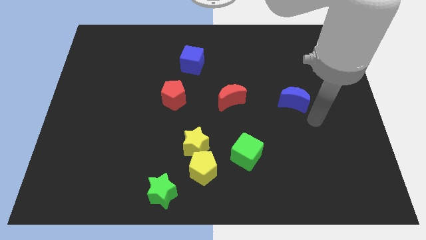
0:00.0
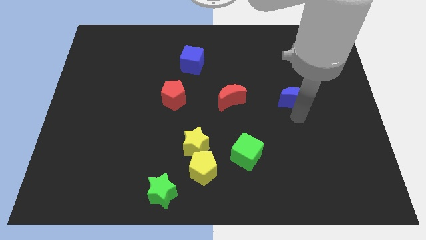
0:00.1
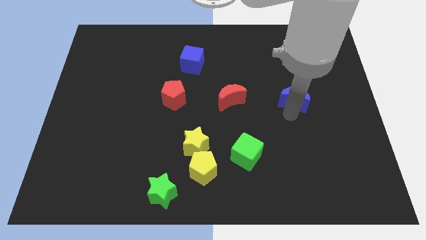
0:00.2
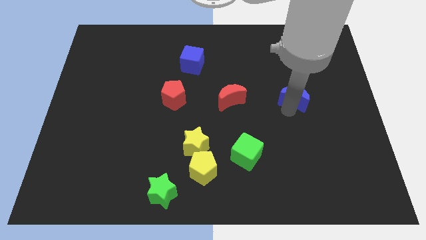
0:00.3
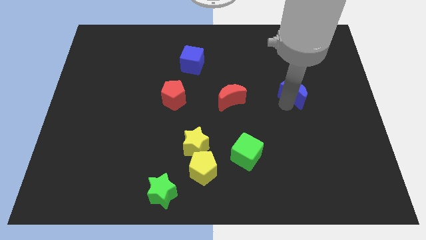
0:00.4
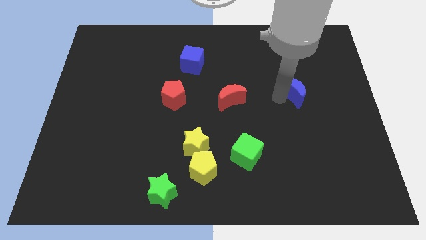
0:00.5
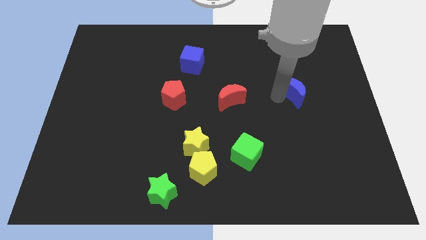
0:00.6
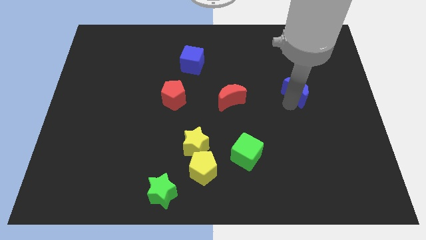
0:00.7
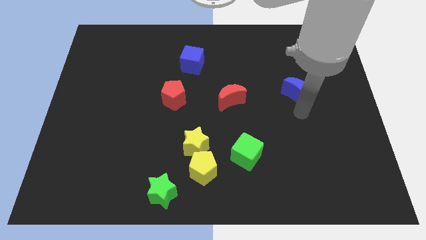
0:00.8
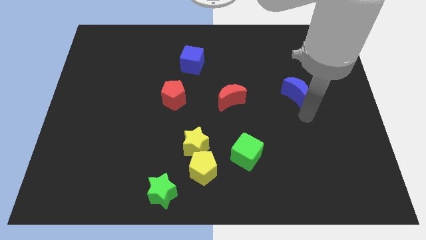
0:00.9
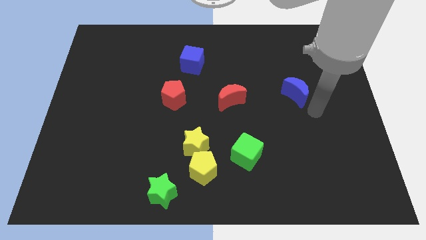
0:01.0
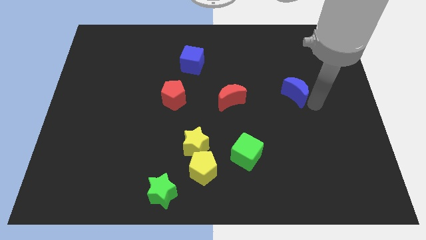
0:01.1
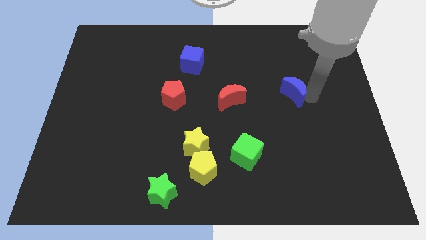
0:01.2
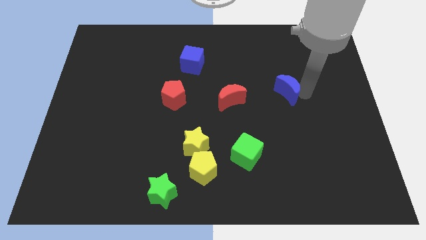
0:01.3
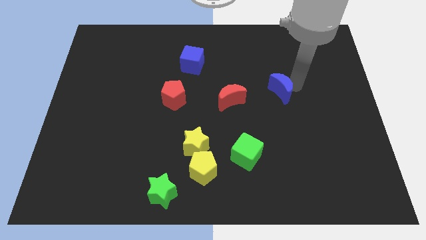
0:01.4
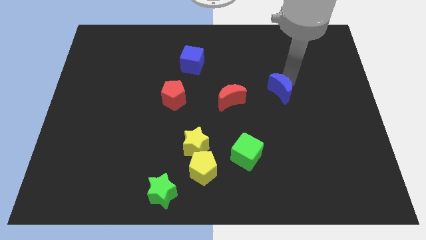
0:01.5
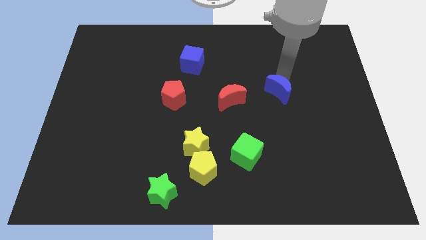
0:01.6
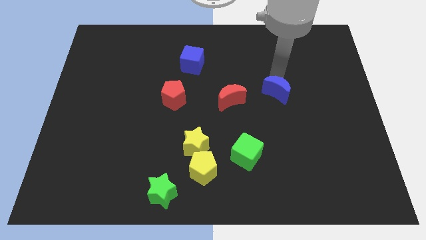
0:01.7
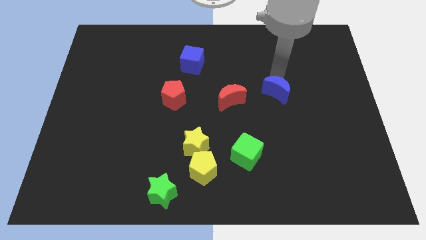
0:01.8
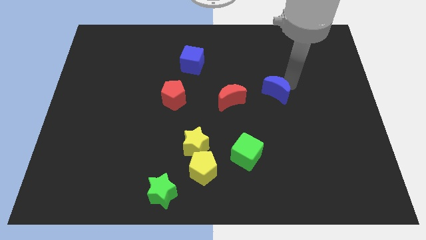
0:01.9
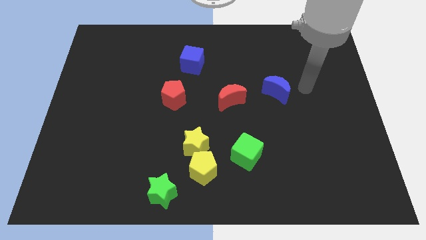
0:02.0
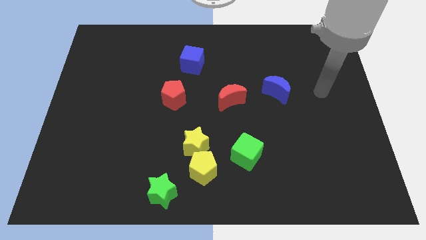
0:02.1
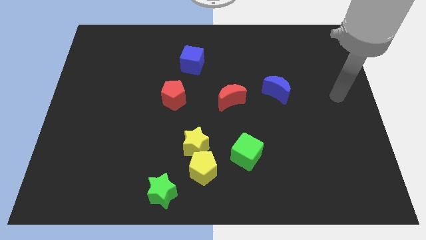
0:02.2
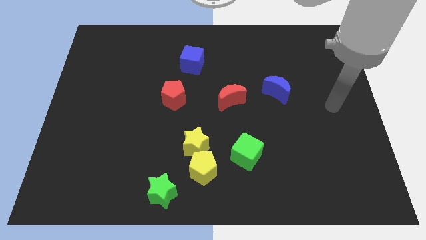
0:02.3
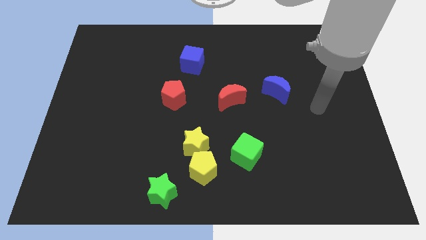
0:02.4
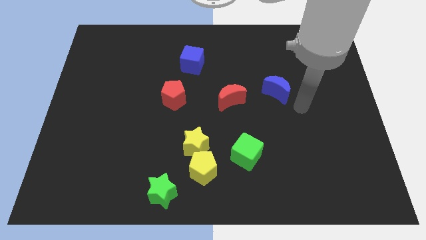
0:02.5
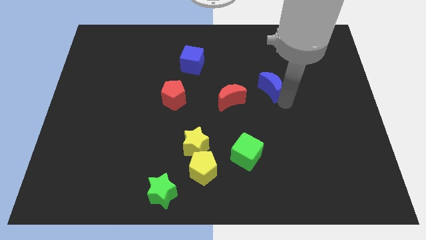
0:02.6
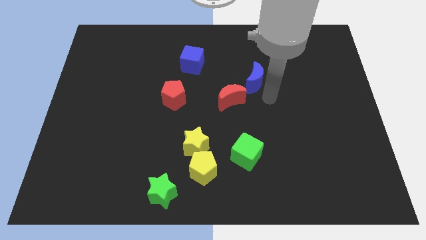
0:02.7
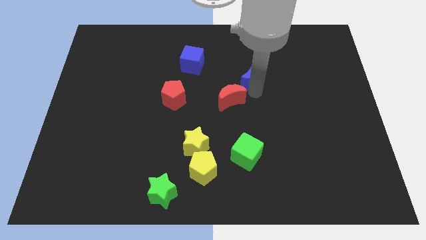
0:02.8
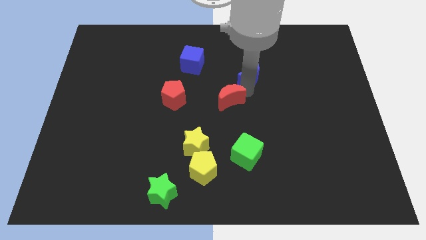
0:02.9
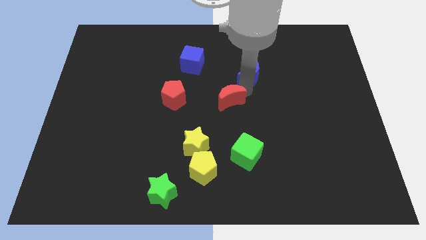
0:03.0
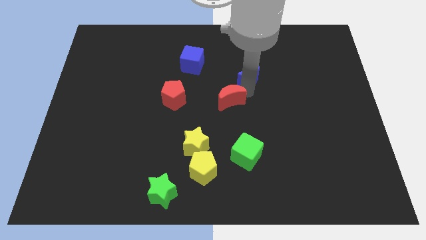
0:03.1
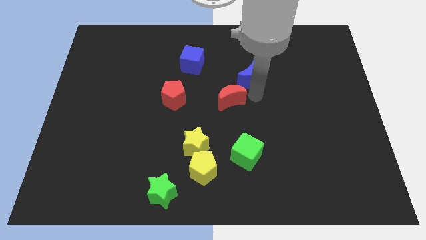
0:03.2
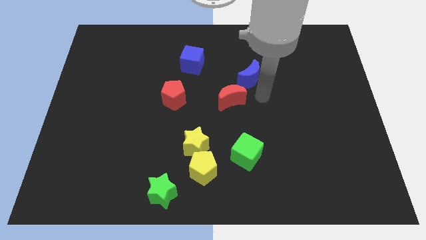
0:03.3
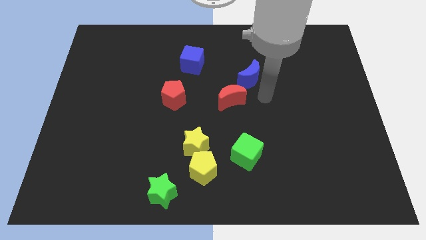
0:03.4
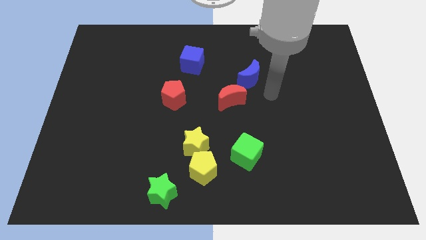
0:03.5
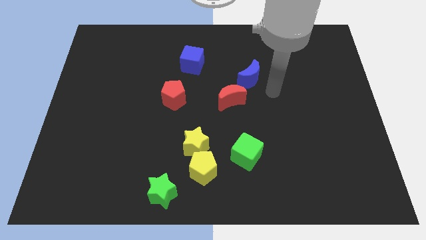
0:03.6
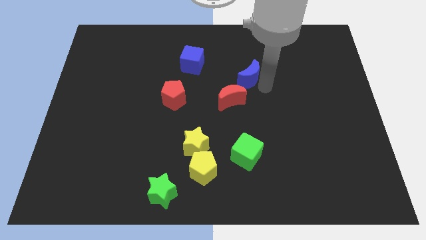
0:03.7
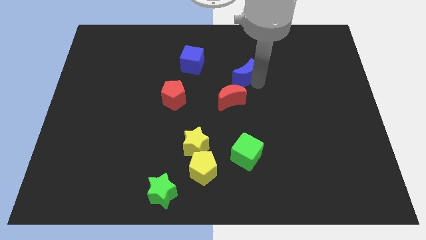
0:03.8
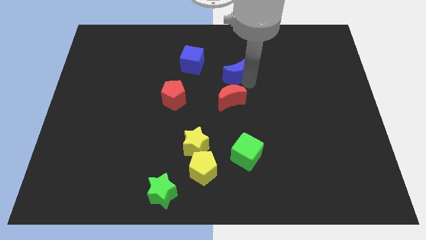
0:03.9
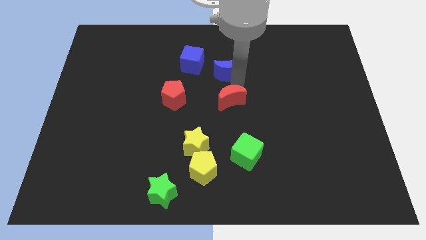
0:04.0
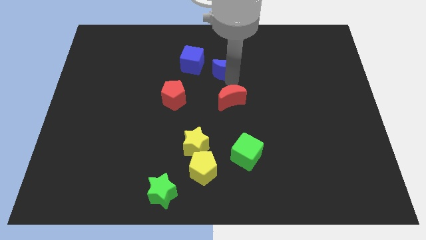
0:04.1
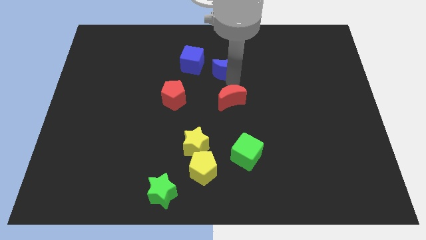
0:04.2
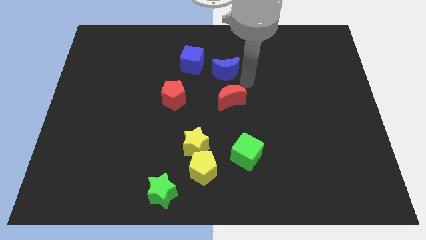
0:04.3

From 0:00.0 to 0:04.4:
put the blue moon parallel right to the blue cube

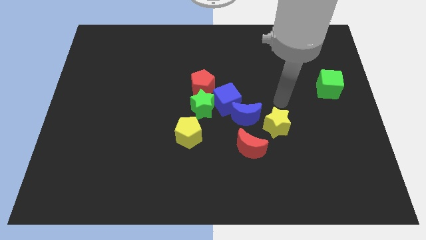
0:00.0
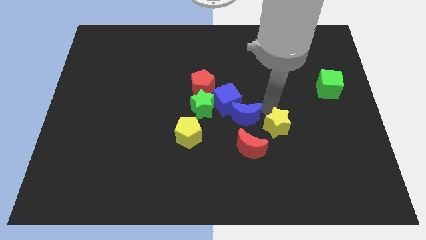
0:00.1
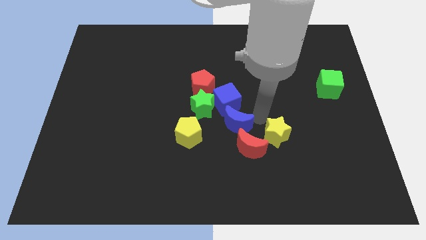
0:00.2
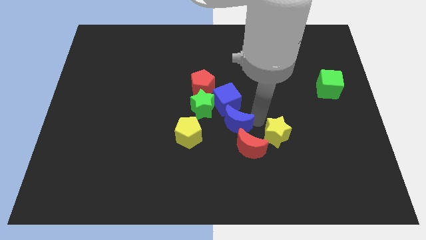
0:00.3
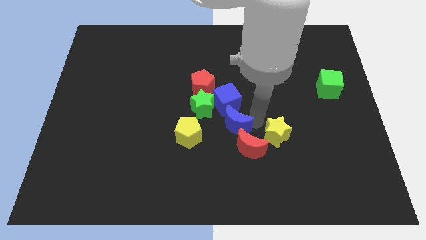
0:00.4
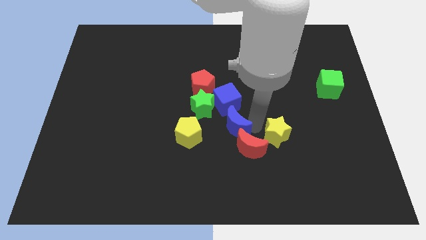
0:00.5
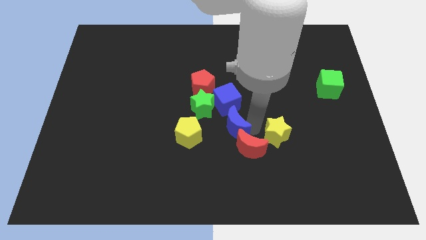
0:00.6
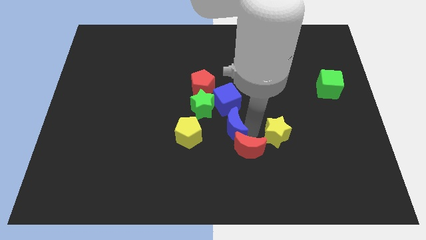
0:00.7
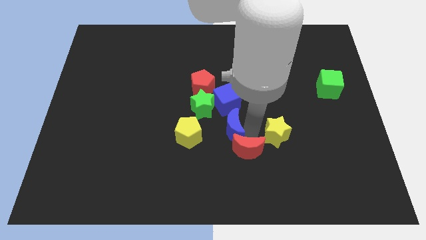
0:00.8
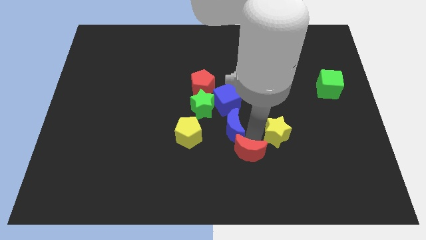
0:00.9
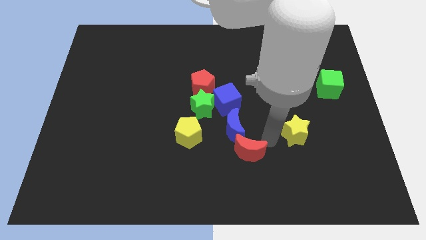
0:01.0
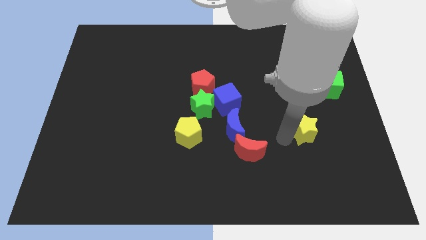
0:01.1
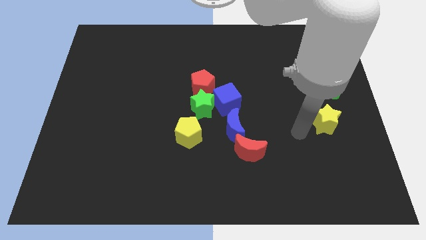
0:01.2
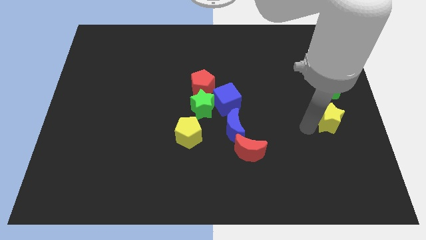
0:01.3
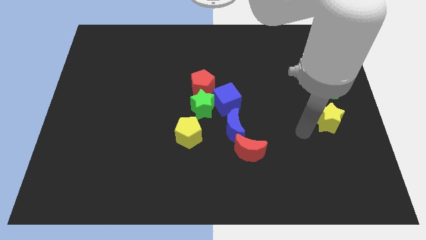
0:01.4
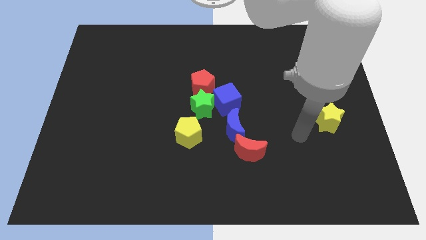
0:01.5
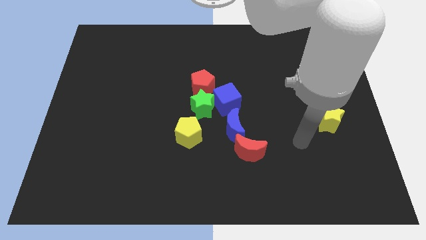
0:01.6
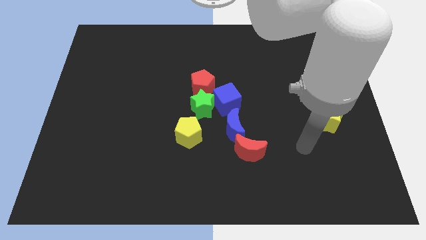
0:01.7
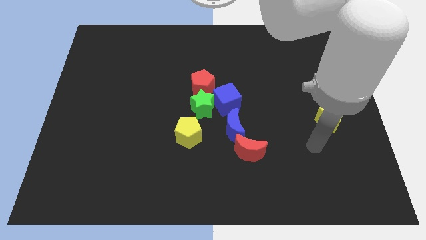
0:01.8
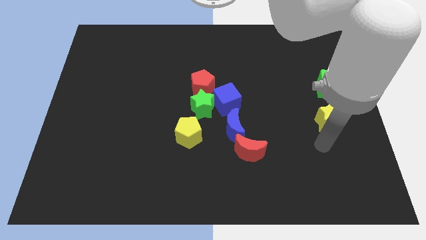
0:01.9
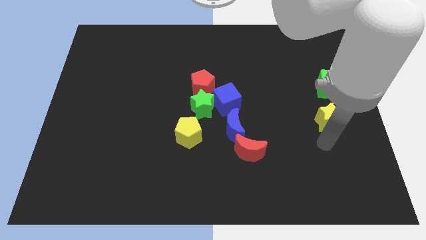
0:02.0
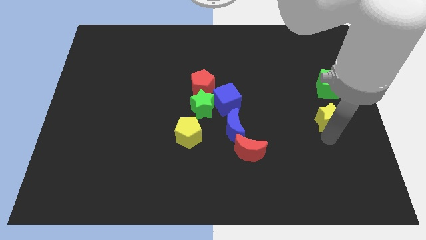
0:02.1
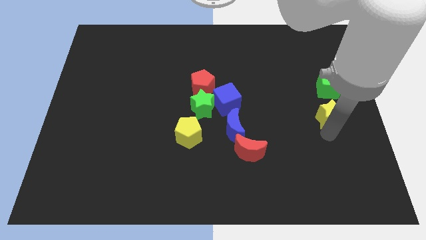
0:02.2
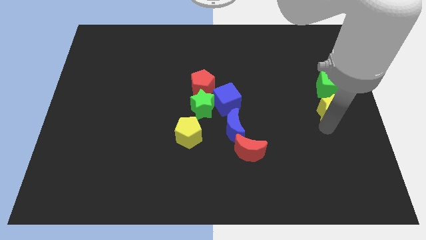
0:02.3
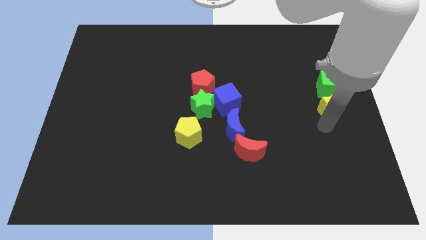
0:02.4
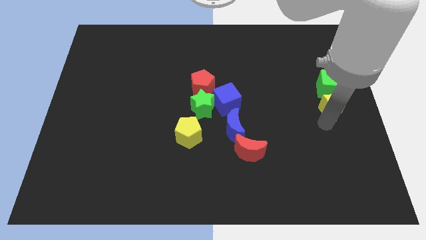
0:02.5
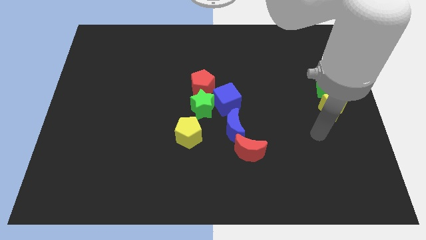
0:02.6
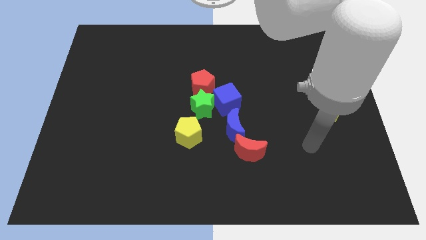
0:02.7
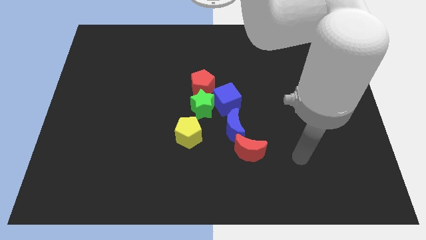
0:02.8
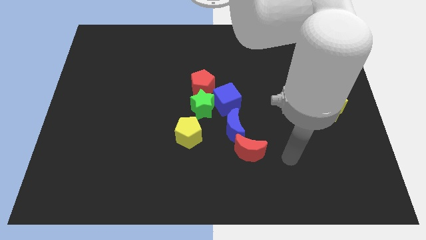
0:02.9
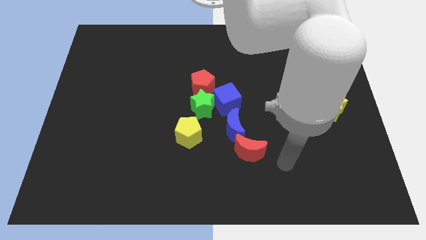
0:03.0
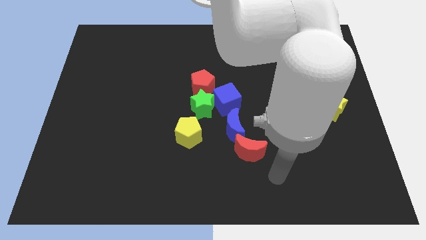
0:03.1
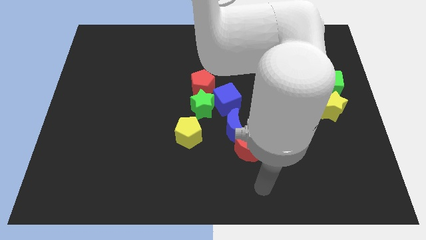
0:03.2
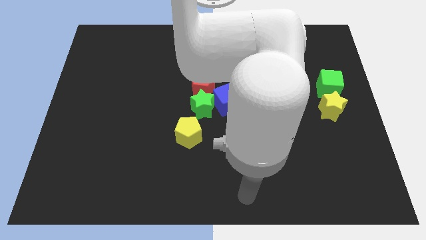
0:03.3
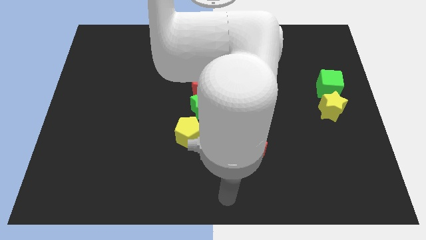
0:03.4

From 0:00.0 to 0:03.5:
place the yellow star below the green cube

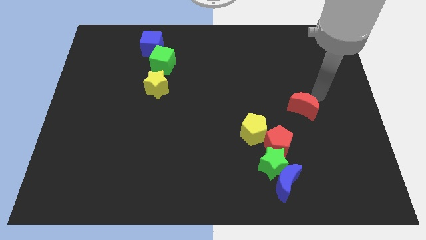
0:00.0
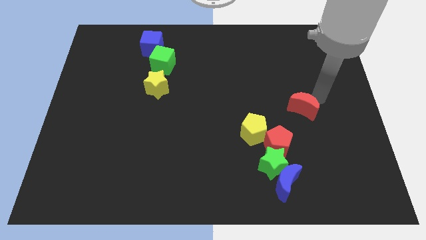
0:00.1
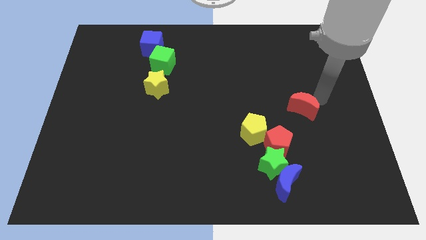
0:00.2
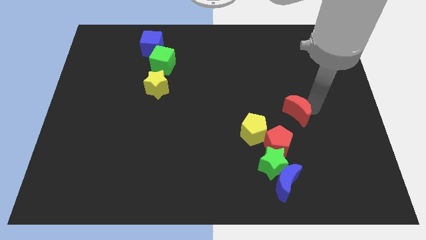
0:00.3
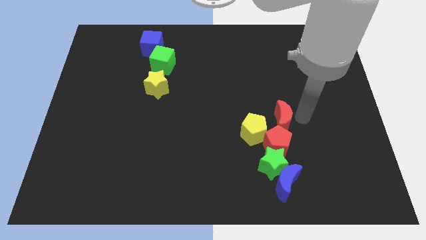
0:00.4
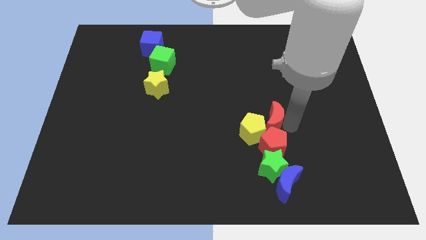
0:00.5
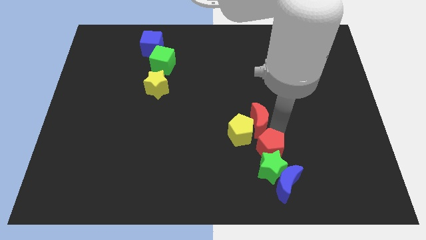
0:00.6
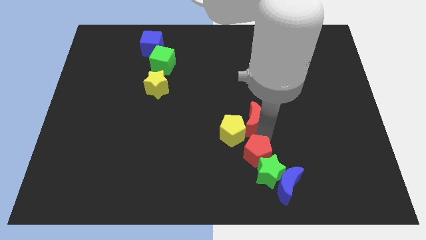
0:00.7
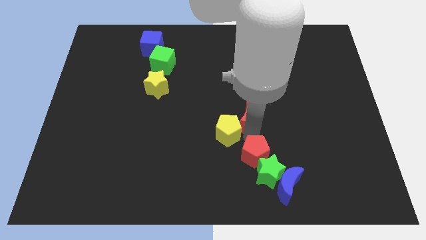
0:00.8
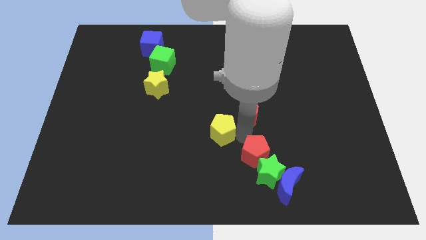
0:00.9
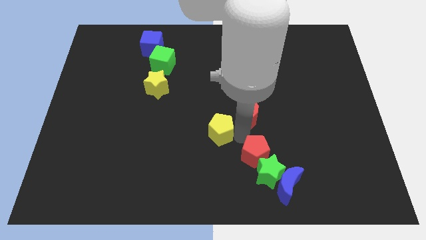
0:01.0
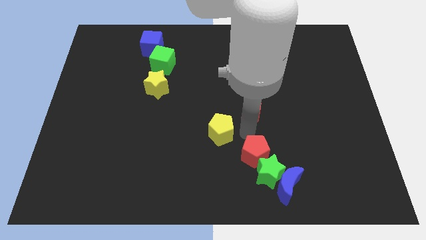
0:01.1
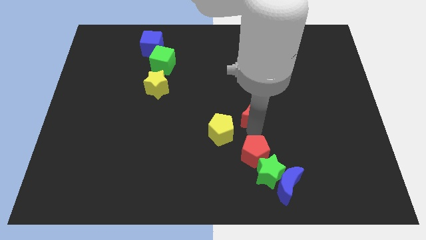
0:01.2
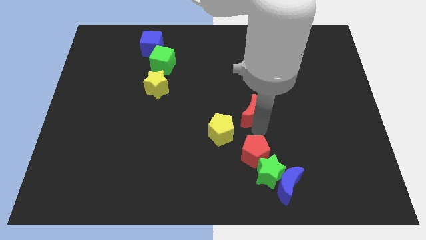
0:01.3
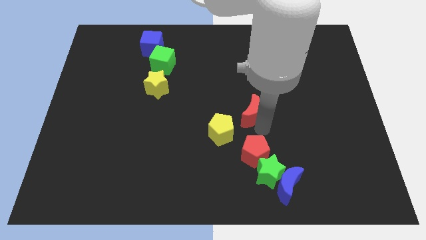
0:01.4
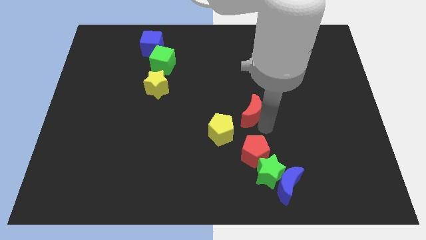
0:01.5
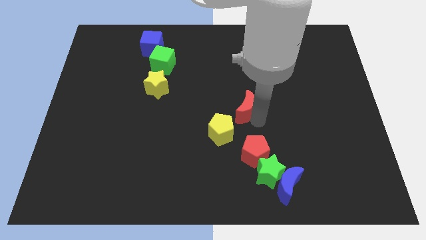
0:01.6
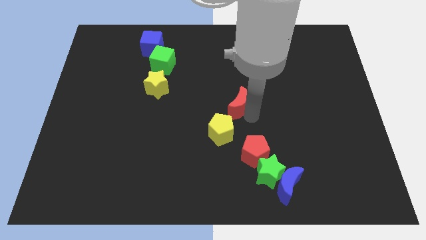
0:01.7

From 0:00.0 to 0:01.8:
push the red moon inti the group of blocks
